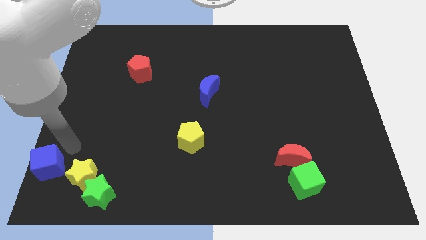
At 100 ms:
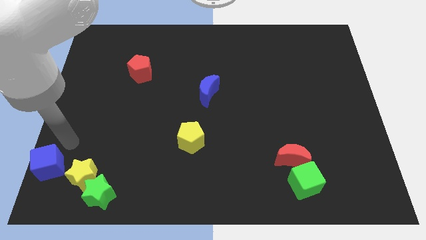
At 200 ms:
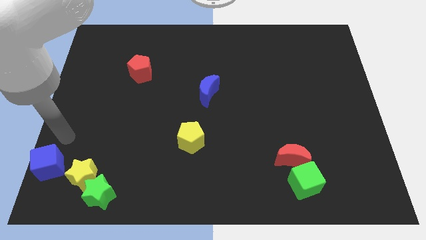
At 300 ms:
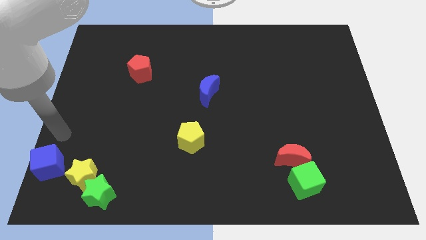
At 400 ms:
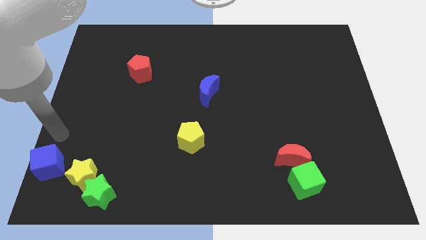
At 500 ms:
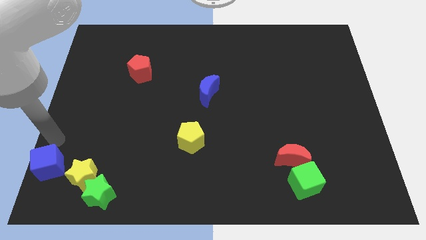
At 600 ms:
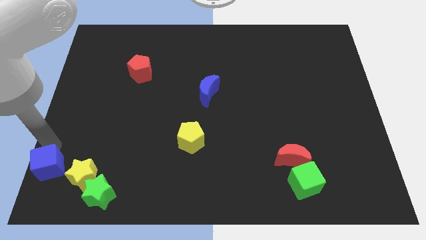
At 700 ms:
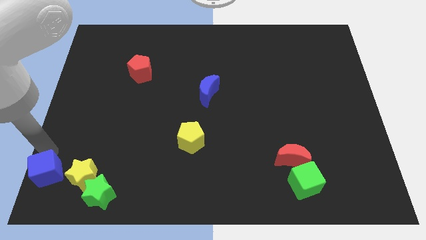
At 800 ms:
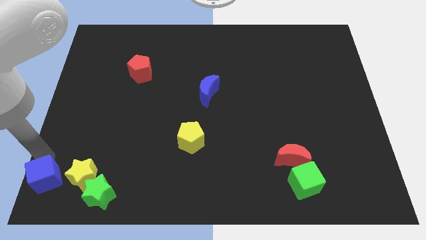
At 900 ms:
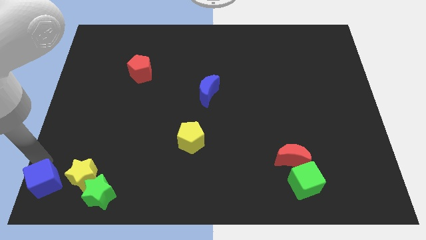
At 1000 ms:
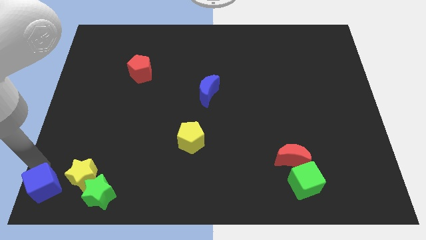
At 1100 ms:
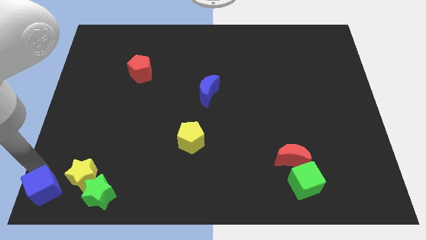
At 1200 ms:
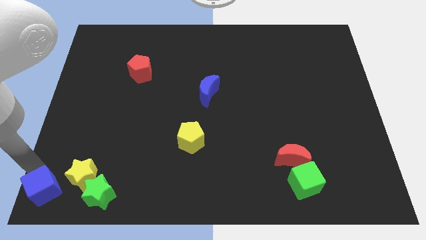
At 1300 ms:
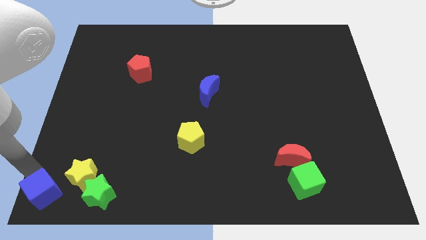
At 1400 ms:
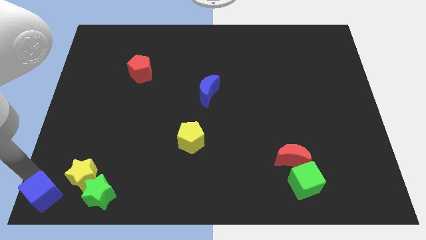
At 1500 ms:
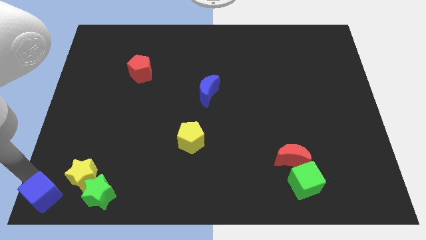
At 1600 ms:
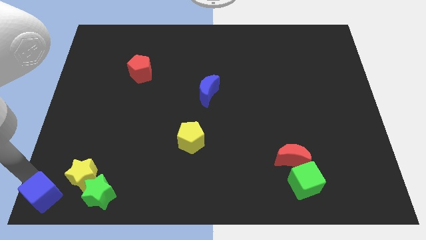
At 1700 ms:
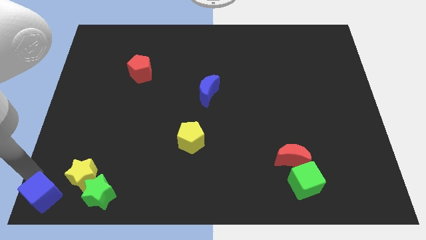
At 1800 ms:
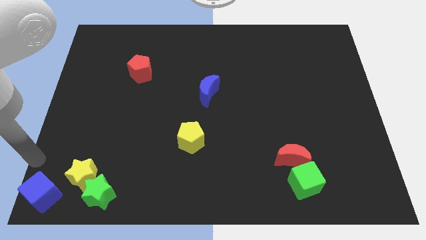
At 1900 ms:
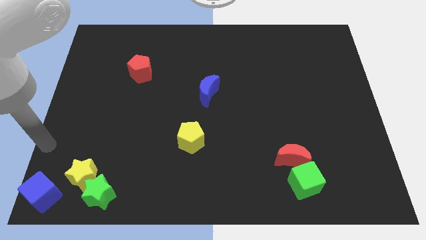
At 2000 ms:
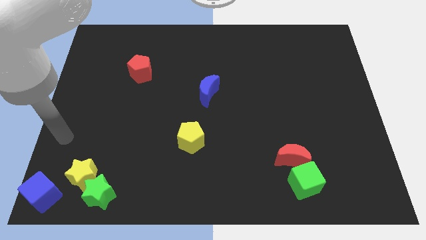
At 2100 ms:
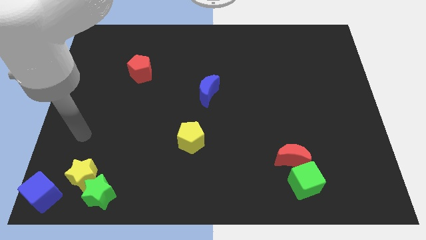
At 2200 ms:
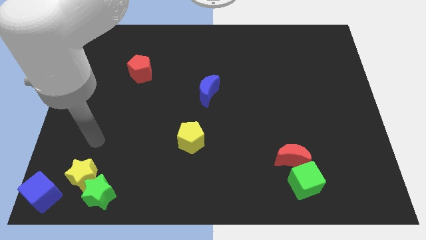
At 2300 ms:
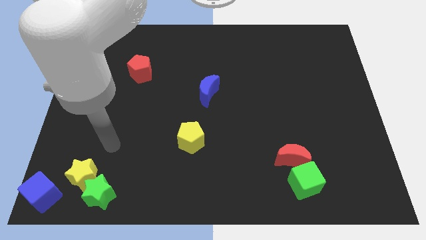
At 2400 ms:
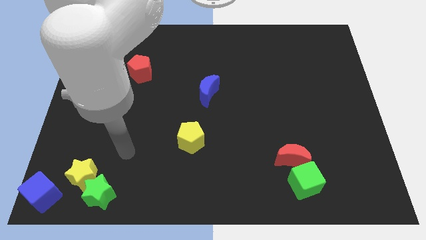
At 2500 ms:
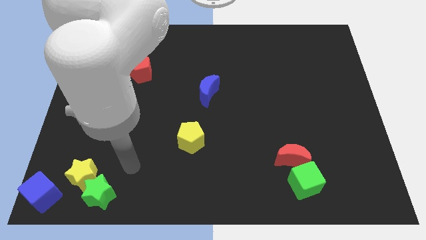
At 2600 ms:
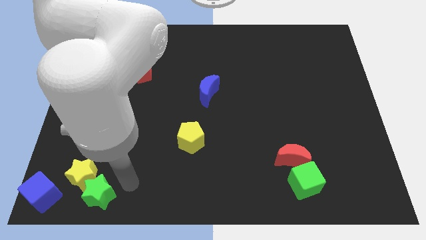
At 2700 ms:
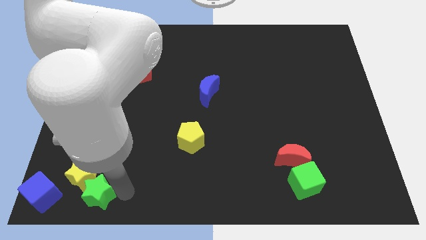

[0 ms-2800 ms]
move blue cube to the bottom left corner

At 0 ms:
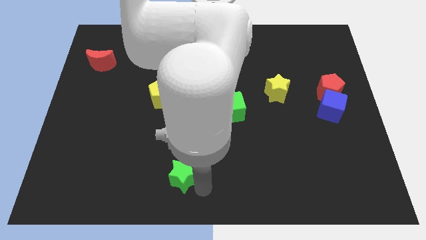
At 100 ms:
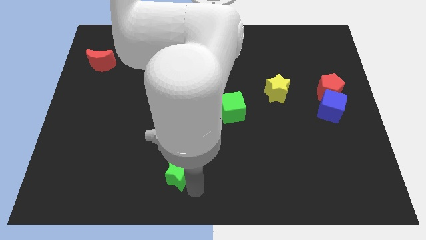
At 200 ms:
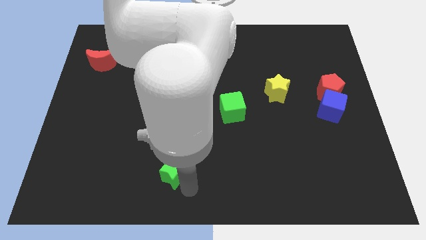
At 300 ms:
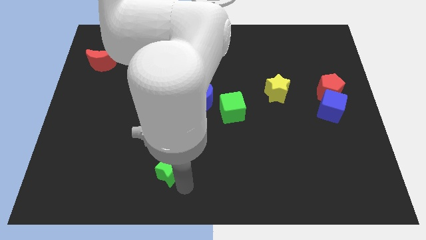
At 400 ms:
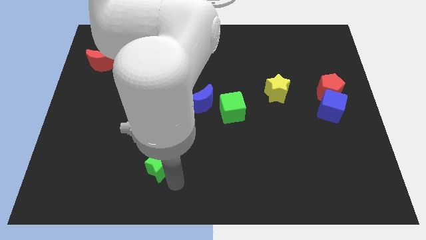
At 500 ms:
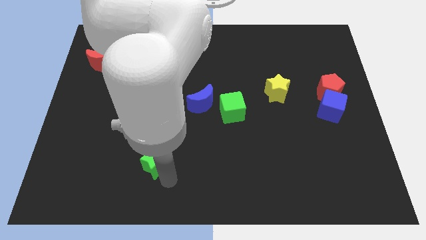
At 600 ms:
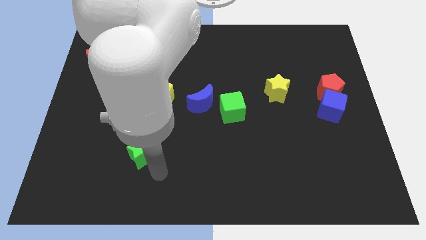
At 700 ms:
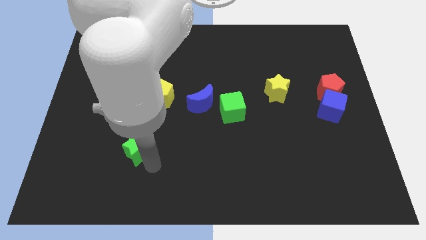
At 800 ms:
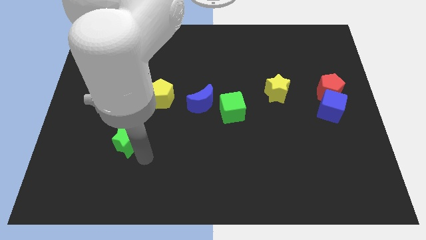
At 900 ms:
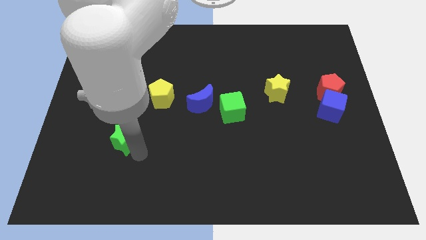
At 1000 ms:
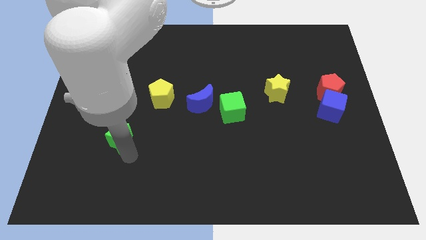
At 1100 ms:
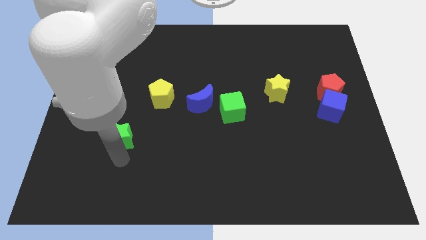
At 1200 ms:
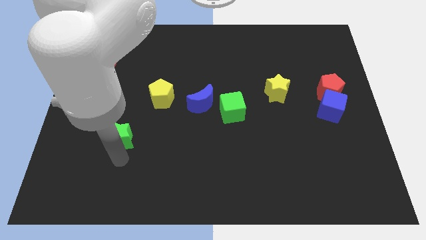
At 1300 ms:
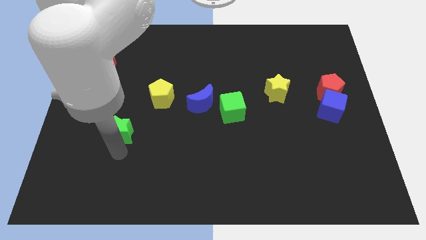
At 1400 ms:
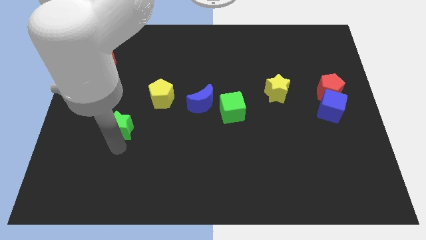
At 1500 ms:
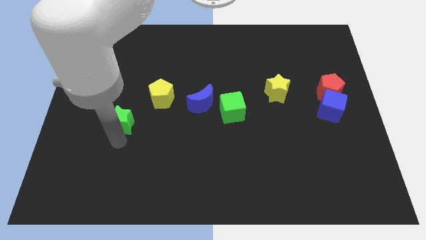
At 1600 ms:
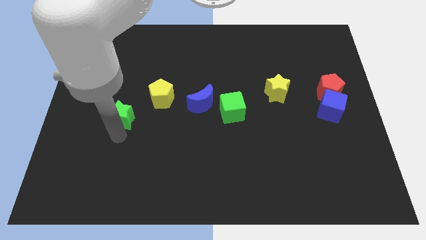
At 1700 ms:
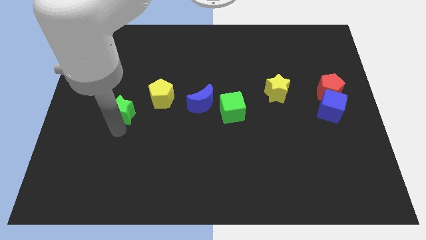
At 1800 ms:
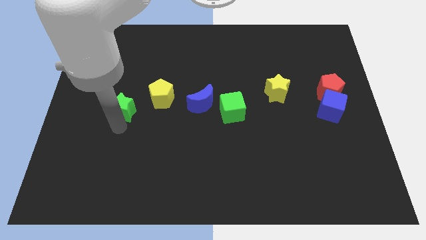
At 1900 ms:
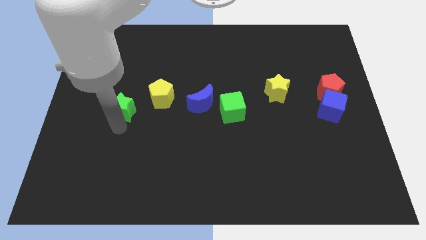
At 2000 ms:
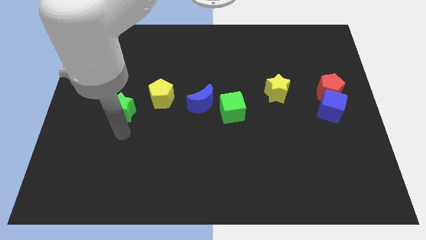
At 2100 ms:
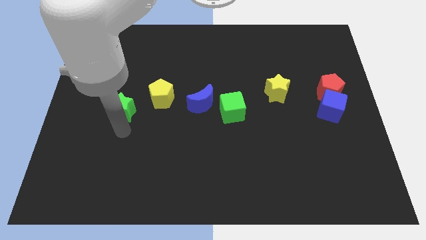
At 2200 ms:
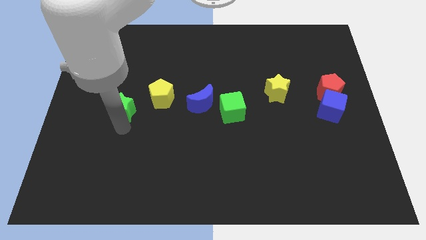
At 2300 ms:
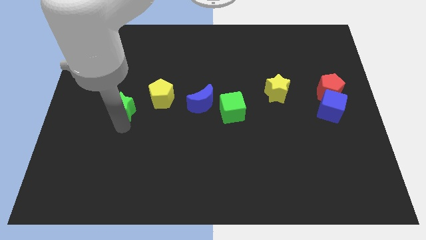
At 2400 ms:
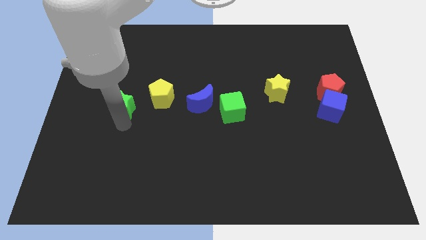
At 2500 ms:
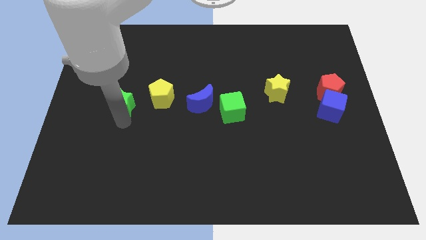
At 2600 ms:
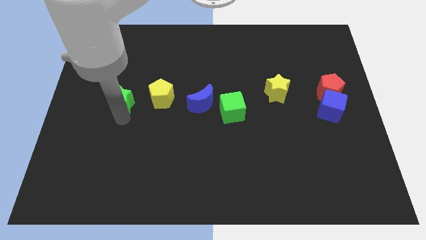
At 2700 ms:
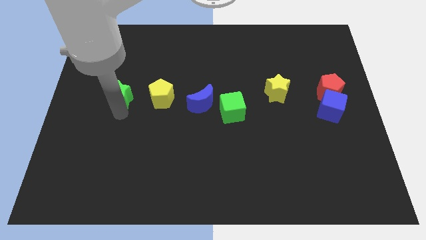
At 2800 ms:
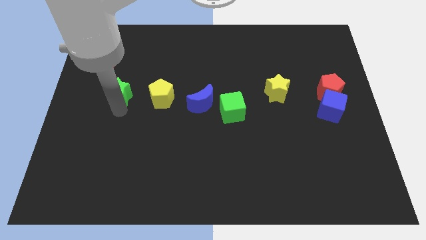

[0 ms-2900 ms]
place green star beside yellow pentagon

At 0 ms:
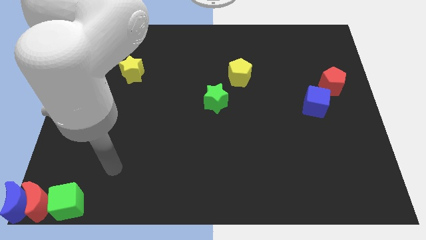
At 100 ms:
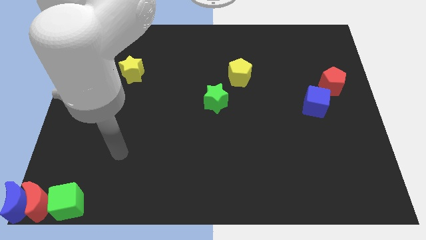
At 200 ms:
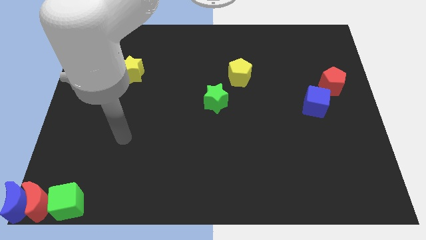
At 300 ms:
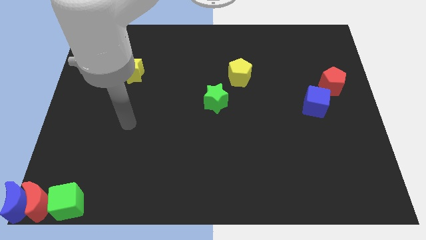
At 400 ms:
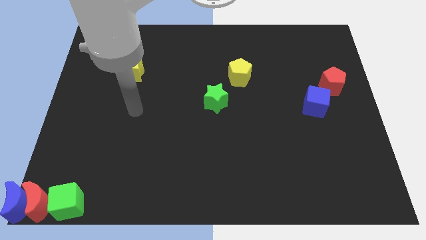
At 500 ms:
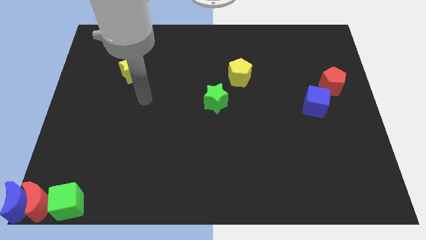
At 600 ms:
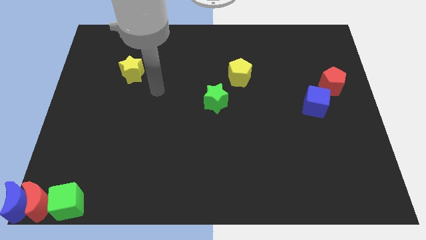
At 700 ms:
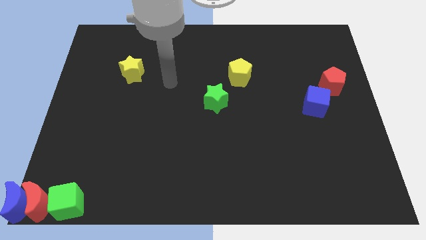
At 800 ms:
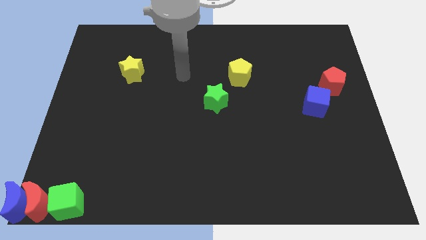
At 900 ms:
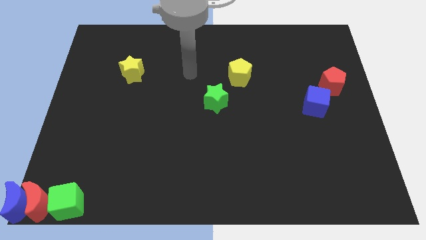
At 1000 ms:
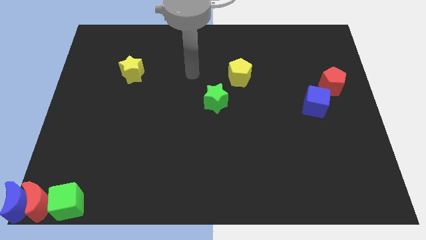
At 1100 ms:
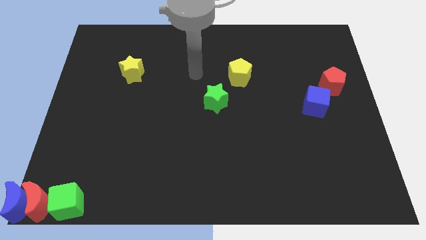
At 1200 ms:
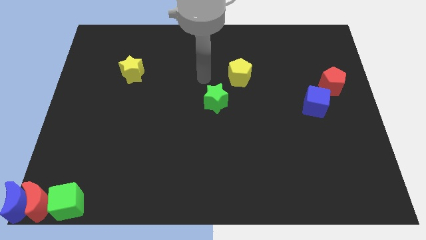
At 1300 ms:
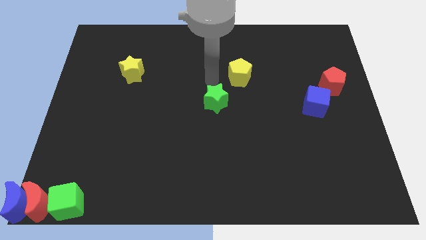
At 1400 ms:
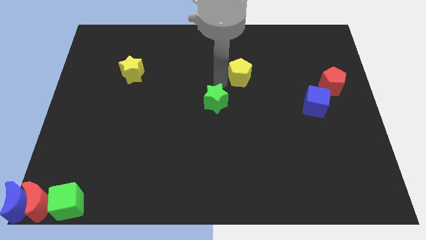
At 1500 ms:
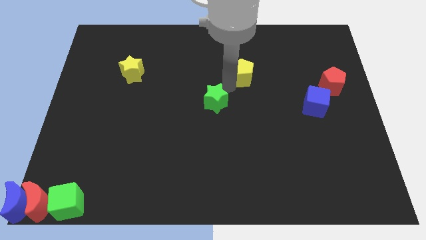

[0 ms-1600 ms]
move the arm towards the green star

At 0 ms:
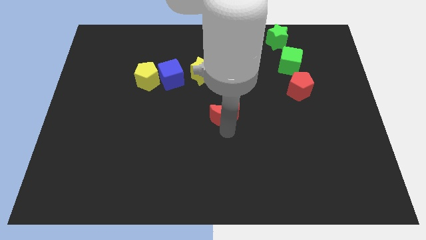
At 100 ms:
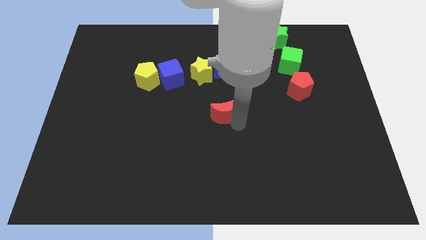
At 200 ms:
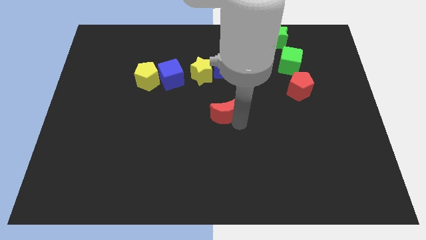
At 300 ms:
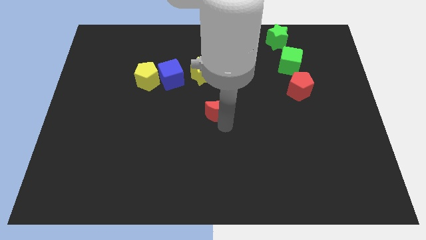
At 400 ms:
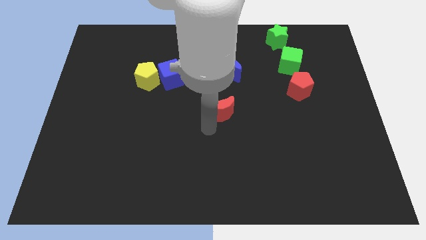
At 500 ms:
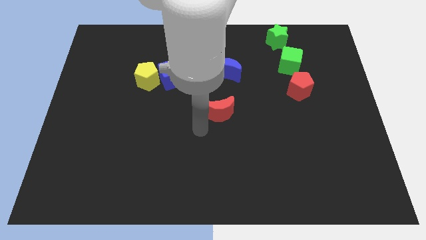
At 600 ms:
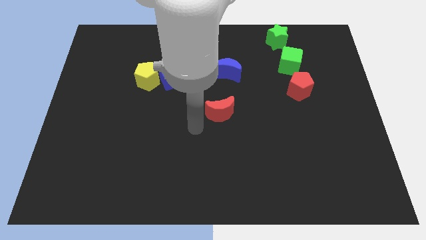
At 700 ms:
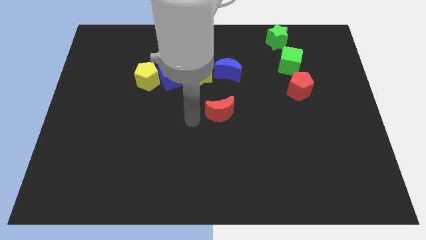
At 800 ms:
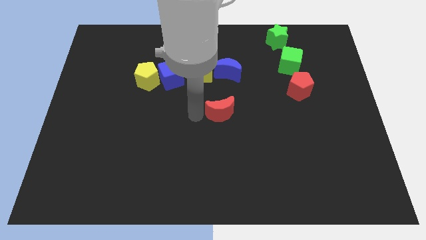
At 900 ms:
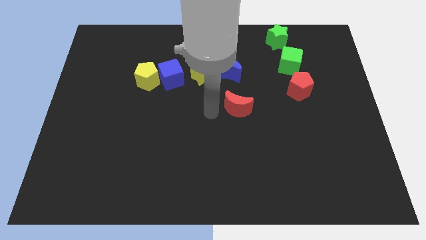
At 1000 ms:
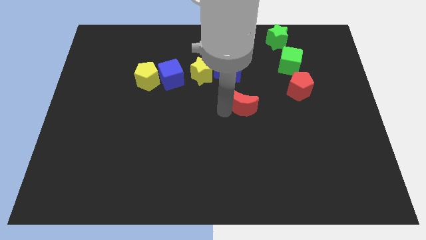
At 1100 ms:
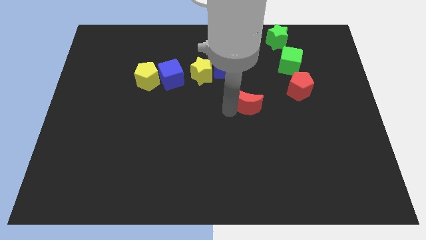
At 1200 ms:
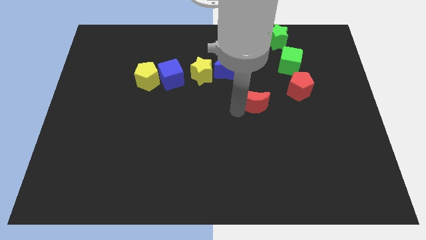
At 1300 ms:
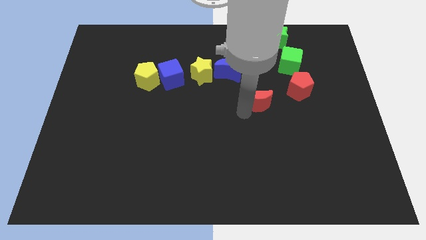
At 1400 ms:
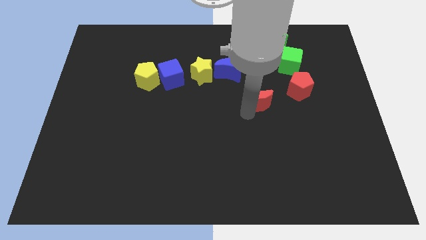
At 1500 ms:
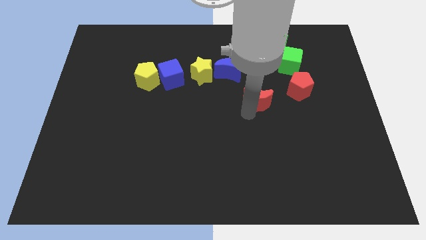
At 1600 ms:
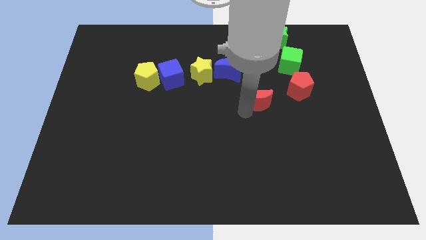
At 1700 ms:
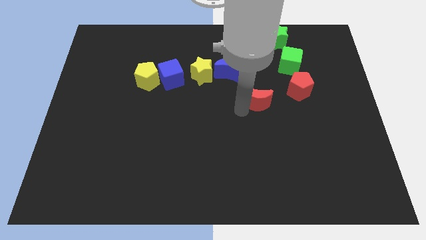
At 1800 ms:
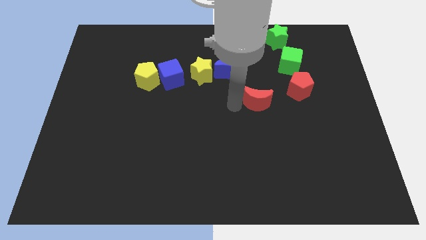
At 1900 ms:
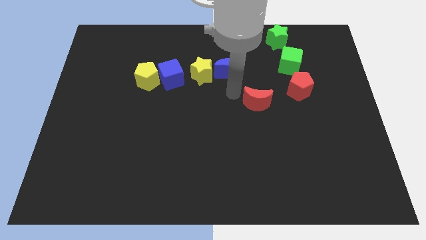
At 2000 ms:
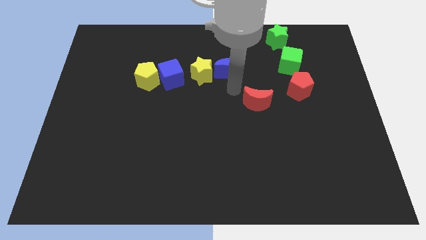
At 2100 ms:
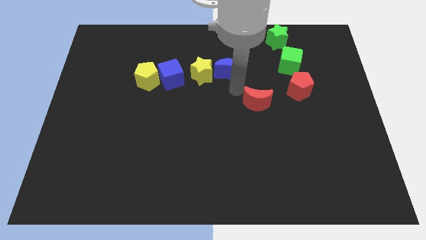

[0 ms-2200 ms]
move the red moon left side of the red pentagon
